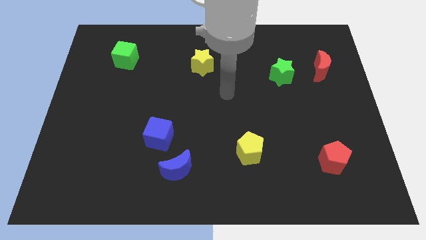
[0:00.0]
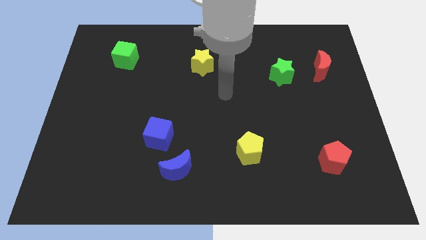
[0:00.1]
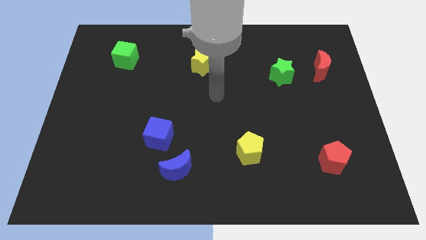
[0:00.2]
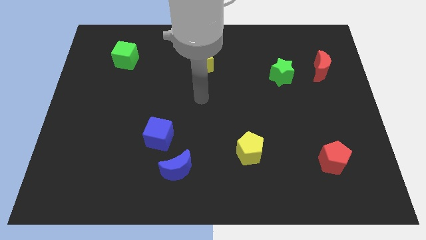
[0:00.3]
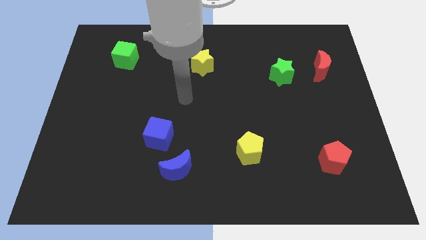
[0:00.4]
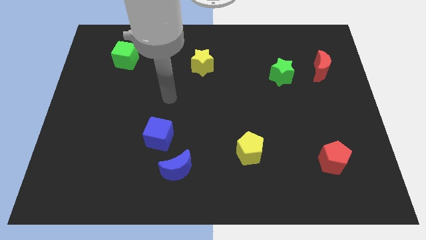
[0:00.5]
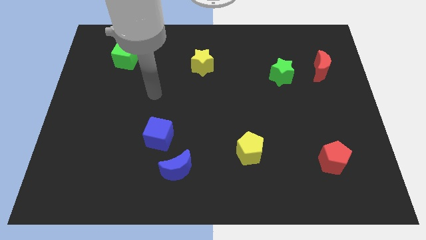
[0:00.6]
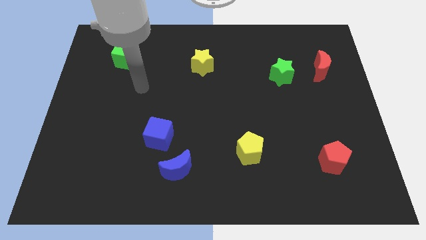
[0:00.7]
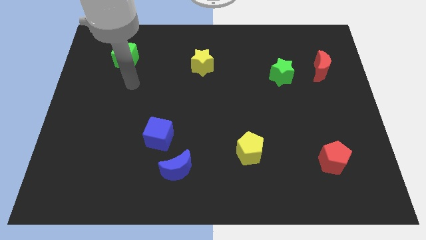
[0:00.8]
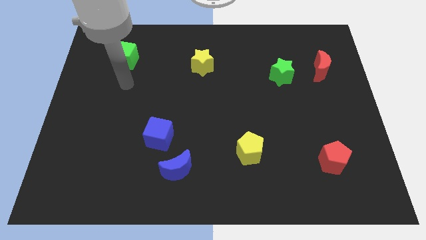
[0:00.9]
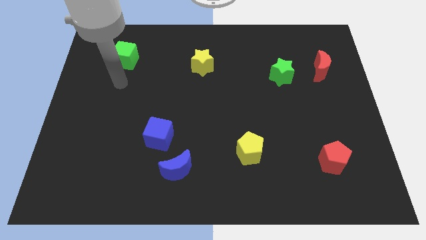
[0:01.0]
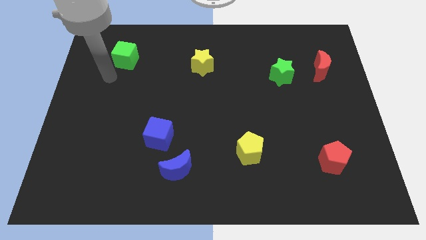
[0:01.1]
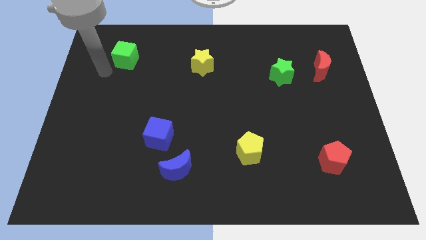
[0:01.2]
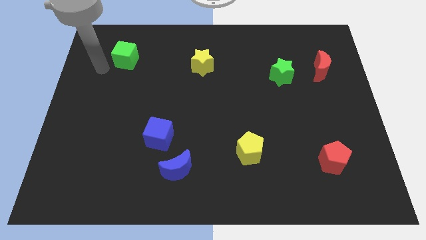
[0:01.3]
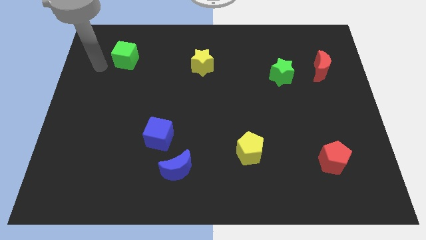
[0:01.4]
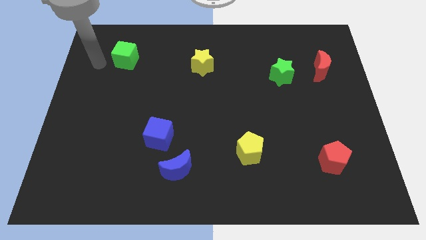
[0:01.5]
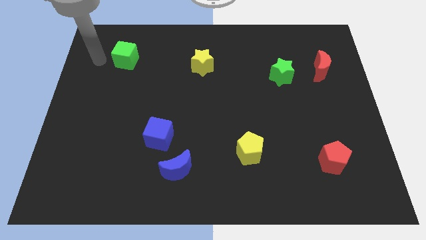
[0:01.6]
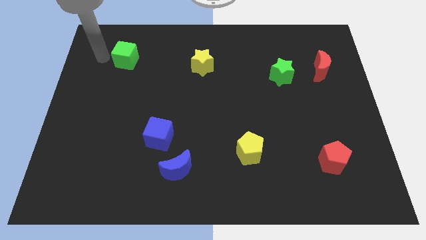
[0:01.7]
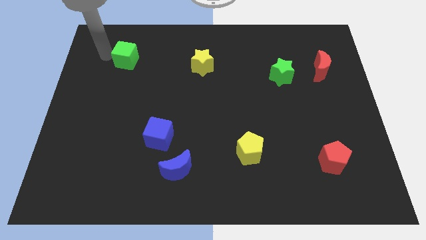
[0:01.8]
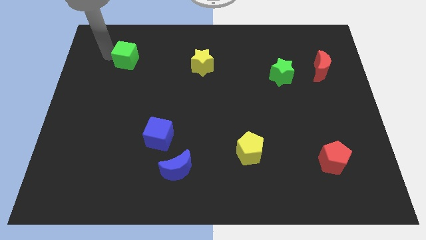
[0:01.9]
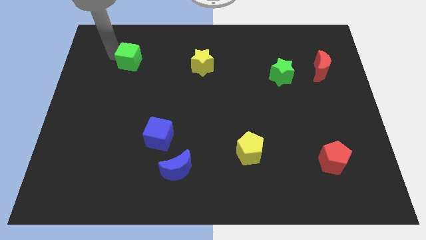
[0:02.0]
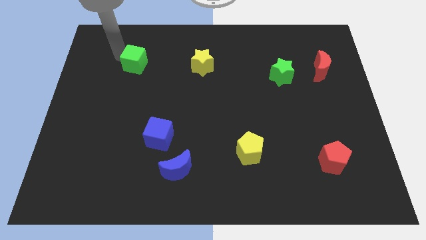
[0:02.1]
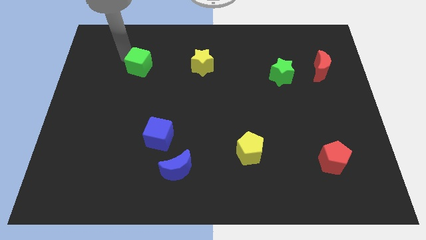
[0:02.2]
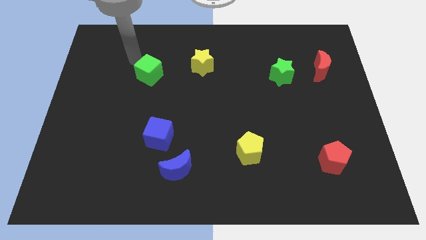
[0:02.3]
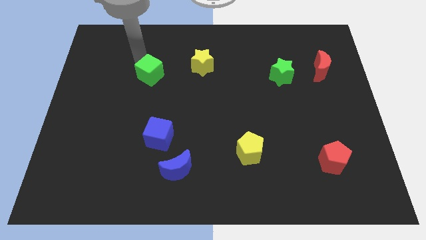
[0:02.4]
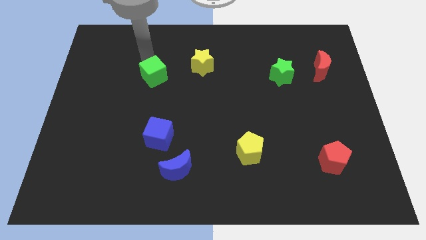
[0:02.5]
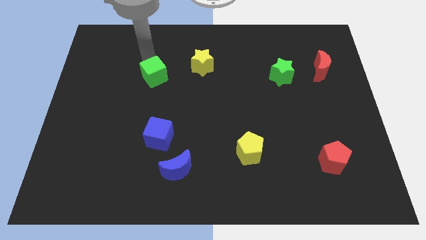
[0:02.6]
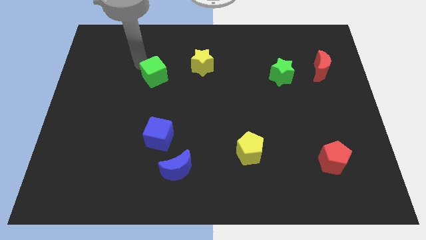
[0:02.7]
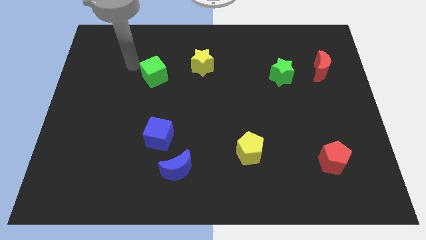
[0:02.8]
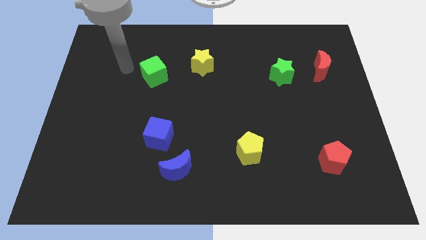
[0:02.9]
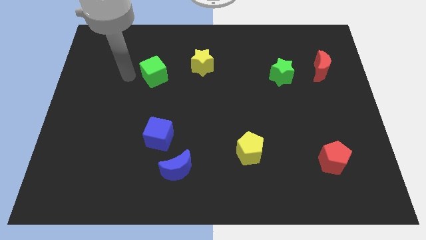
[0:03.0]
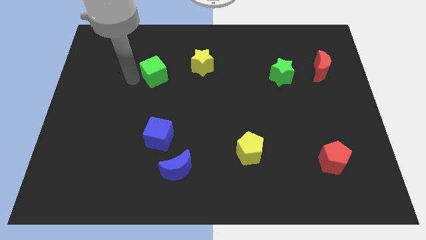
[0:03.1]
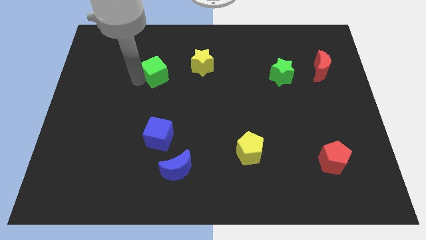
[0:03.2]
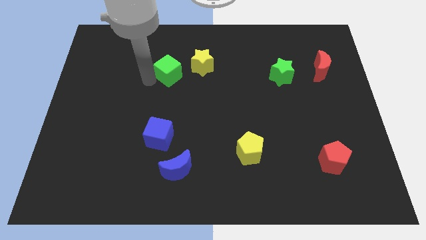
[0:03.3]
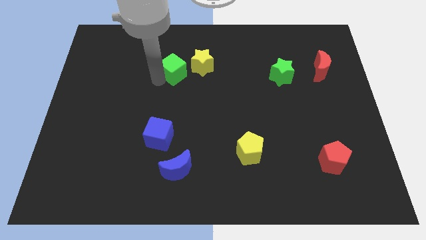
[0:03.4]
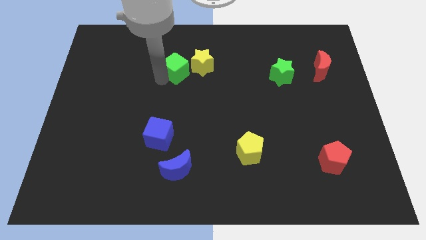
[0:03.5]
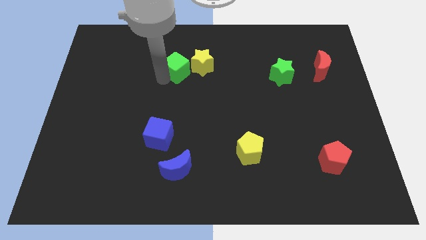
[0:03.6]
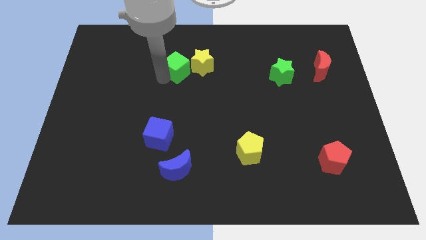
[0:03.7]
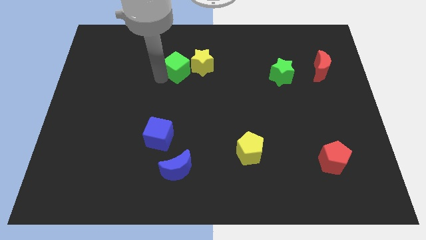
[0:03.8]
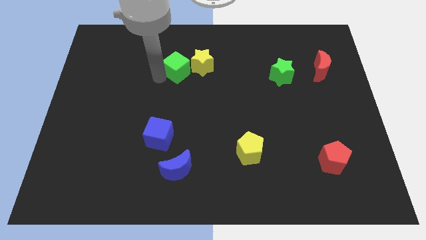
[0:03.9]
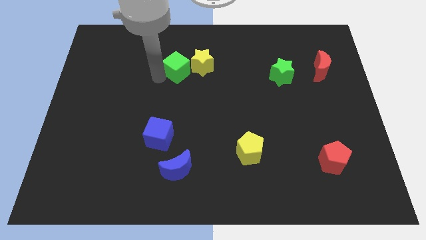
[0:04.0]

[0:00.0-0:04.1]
move the green cube to the left of the yellow star

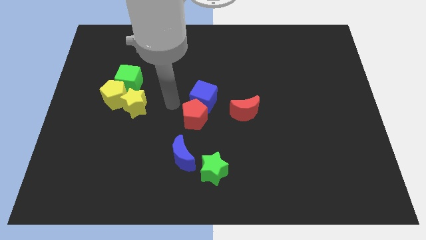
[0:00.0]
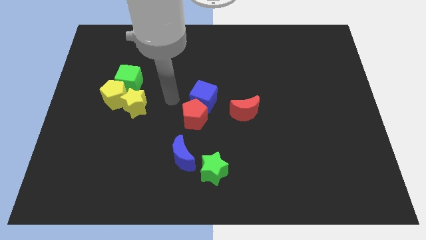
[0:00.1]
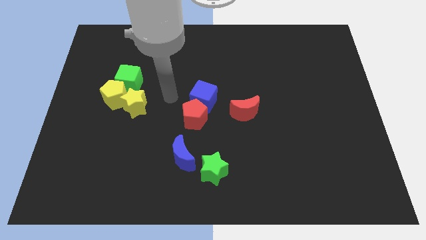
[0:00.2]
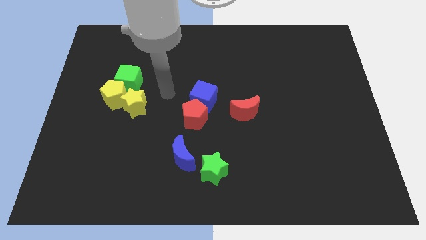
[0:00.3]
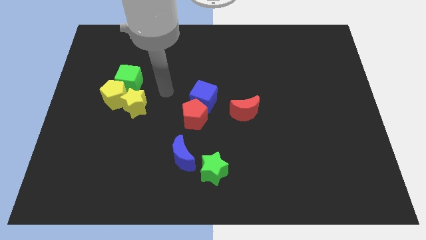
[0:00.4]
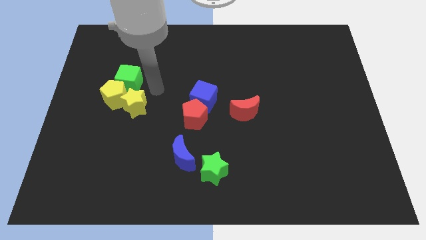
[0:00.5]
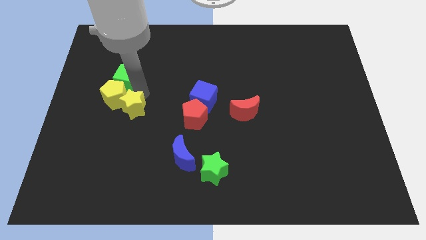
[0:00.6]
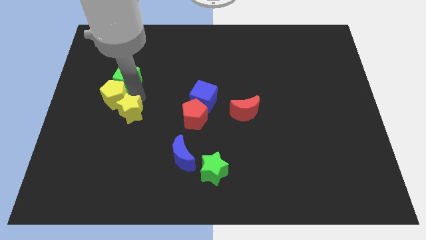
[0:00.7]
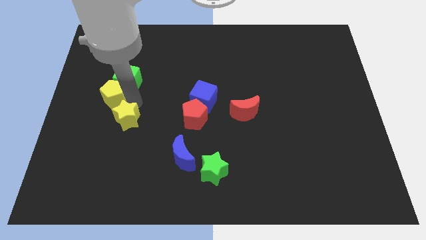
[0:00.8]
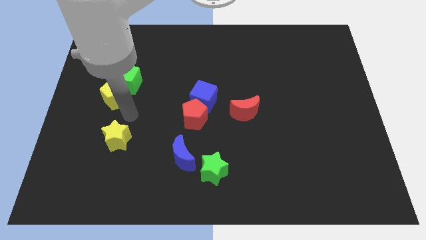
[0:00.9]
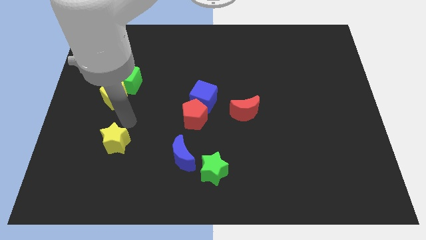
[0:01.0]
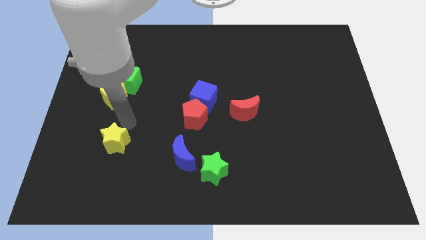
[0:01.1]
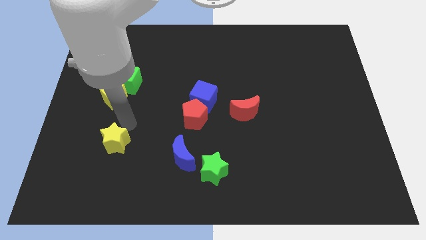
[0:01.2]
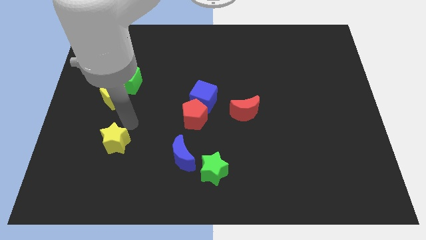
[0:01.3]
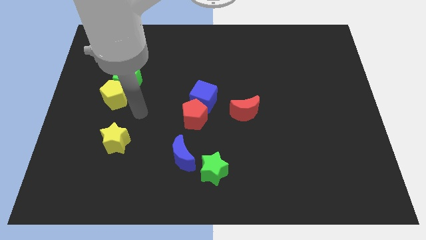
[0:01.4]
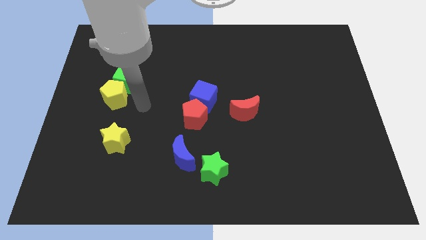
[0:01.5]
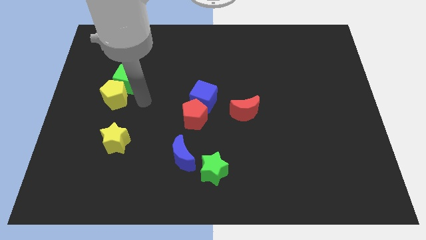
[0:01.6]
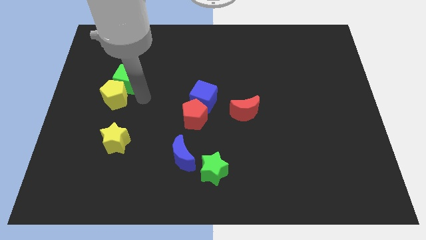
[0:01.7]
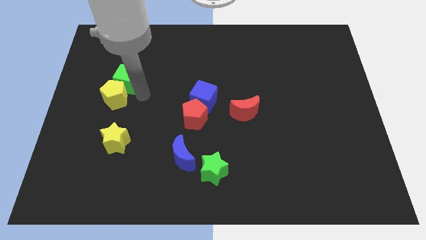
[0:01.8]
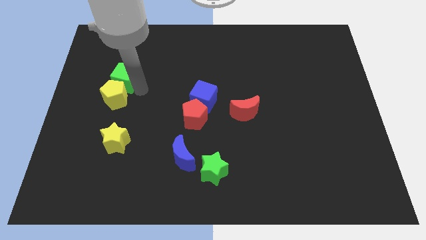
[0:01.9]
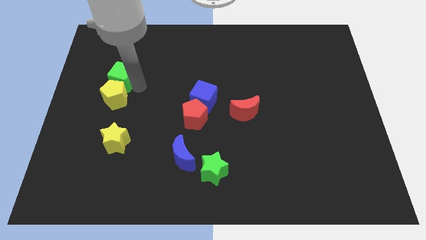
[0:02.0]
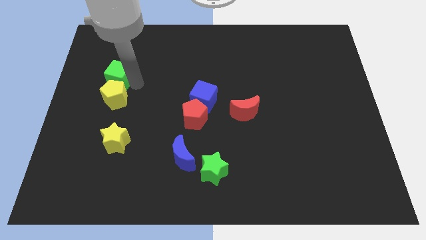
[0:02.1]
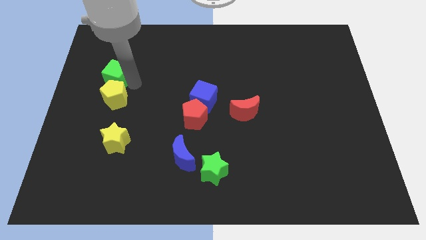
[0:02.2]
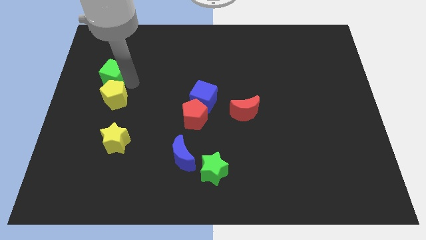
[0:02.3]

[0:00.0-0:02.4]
separate the yellow star from the yellow pentagon

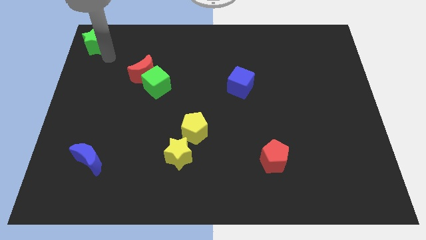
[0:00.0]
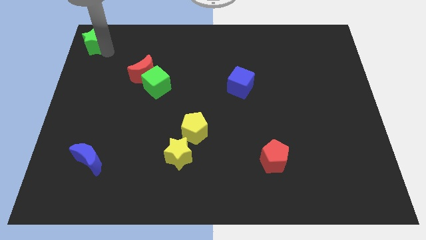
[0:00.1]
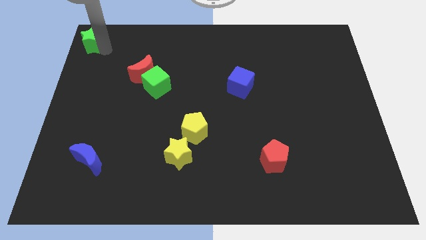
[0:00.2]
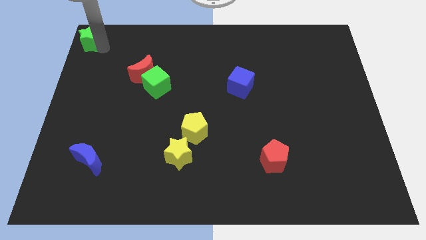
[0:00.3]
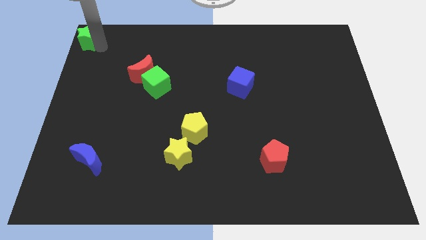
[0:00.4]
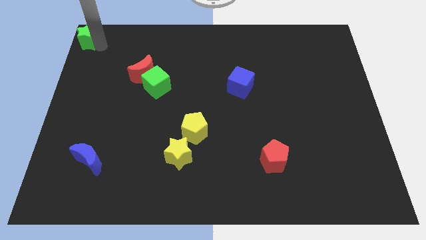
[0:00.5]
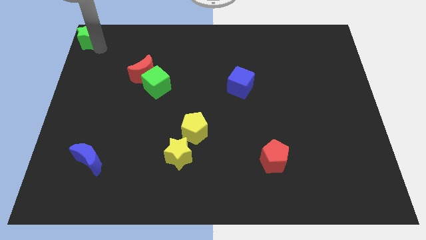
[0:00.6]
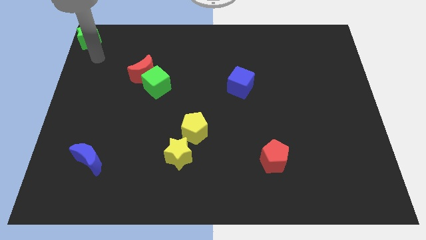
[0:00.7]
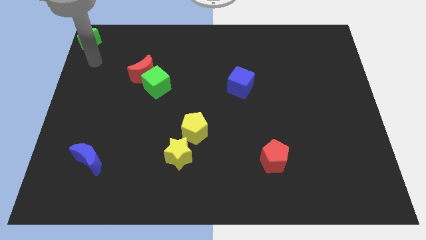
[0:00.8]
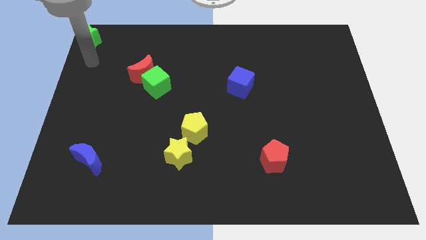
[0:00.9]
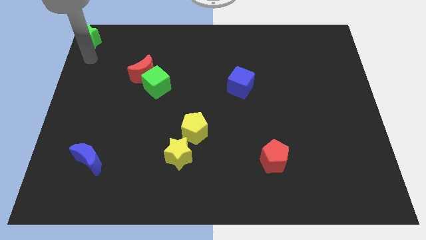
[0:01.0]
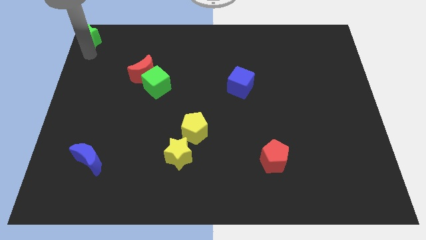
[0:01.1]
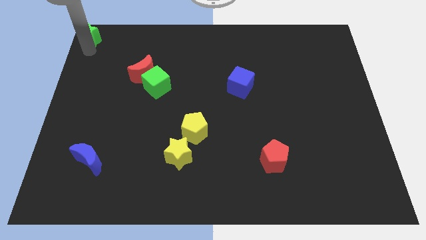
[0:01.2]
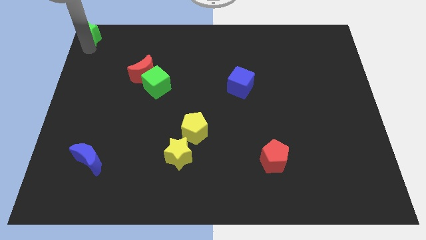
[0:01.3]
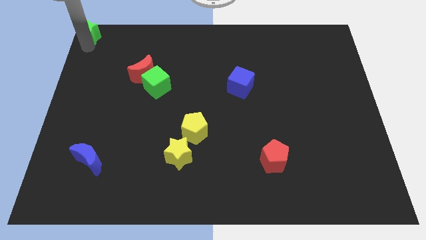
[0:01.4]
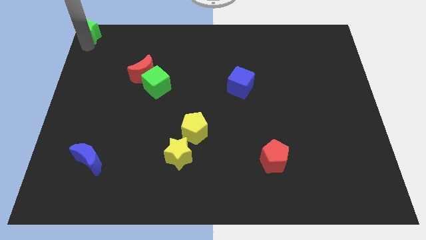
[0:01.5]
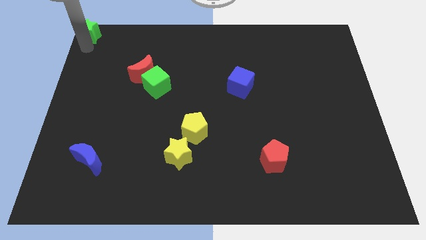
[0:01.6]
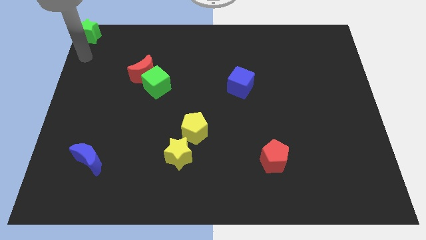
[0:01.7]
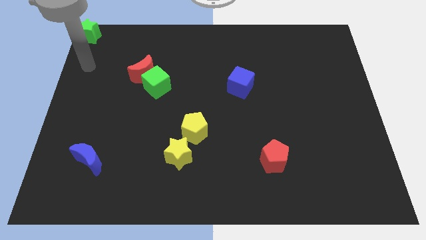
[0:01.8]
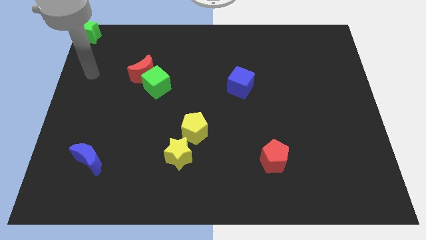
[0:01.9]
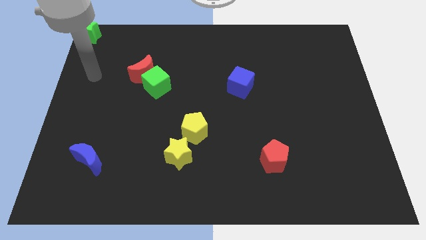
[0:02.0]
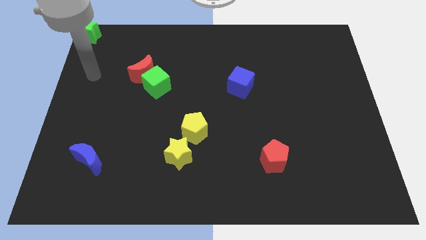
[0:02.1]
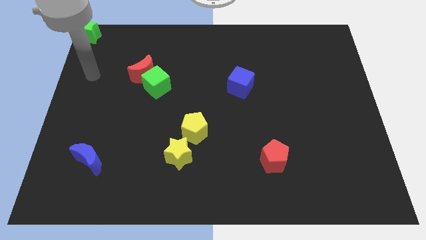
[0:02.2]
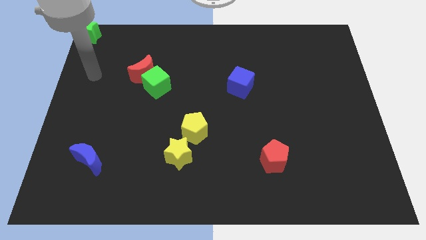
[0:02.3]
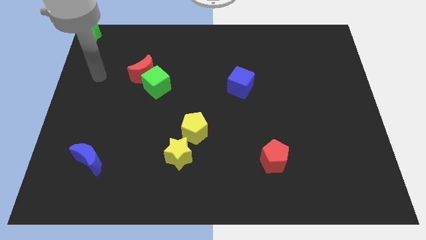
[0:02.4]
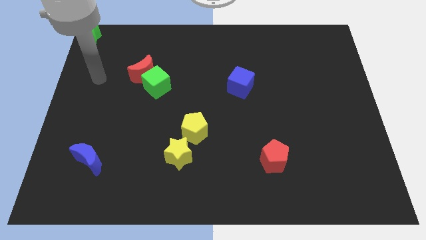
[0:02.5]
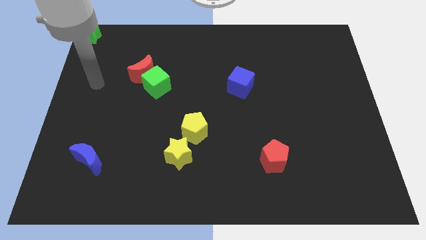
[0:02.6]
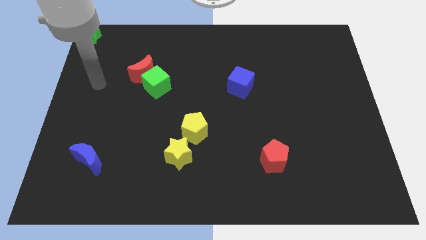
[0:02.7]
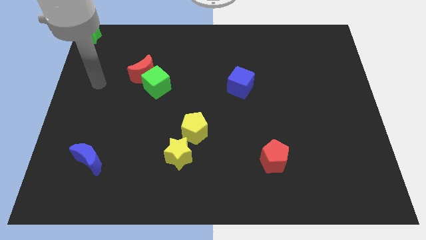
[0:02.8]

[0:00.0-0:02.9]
place the green star at the top left of the board
